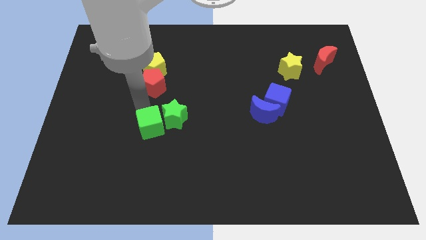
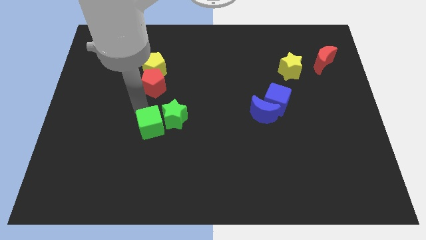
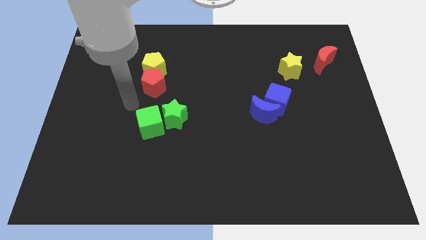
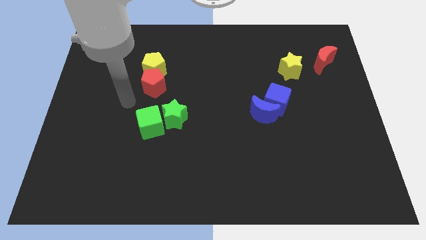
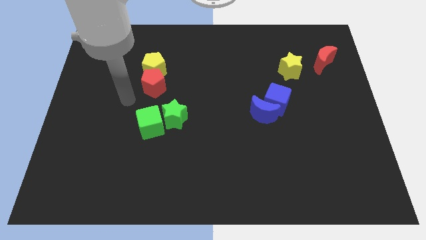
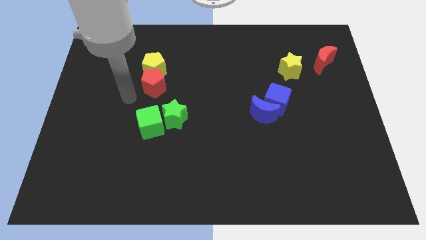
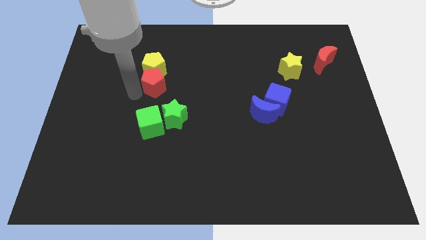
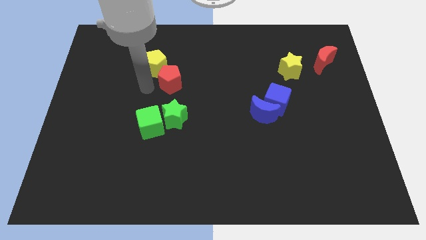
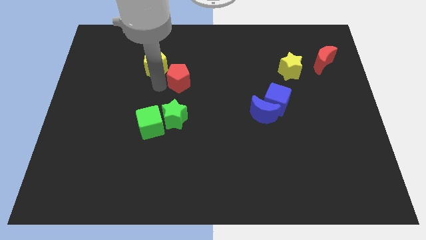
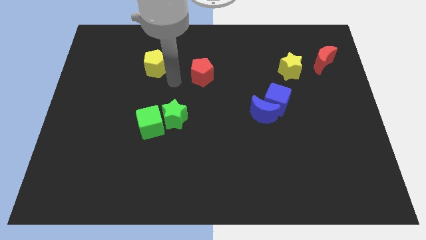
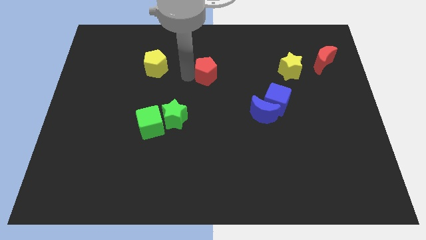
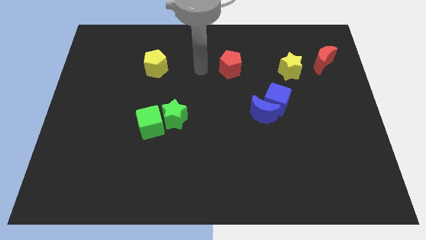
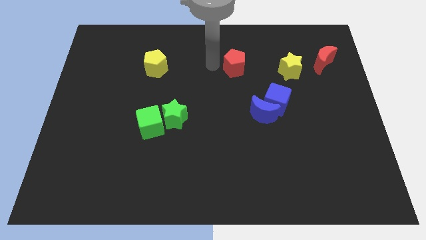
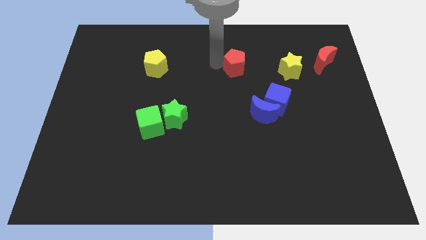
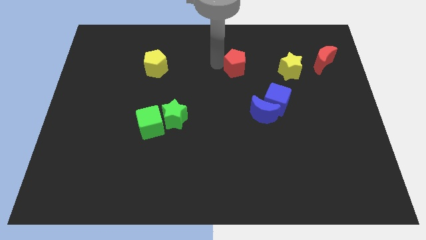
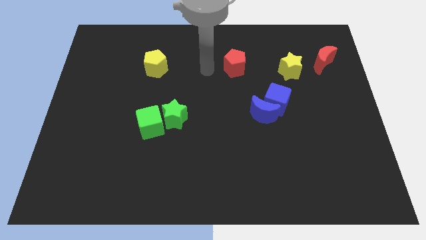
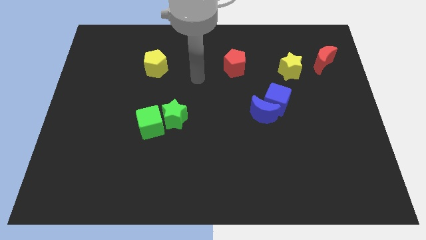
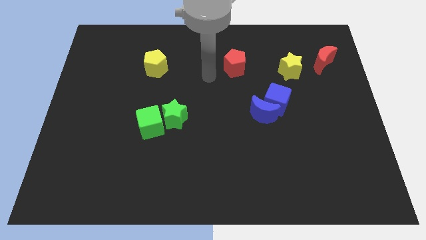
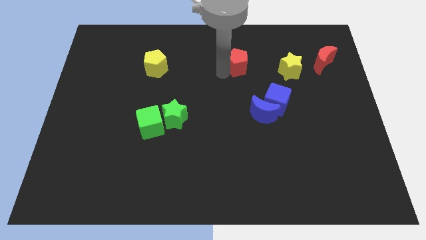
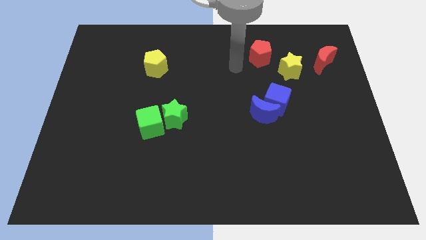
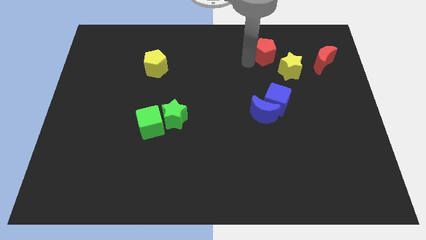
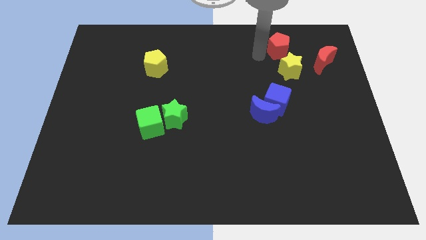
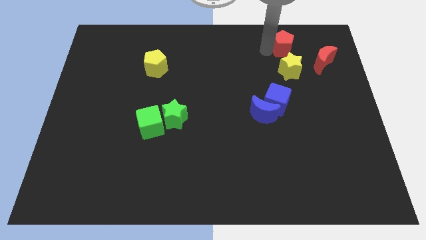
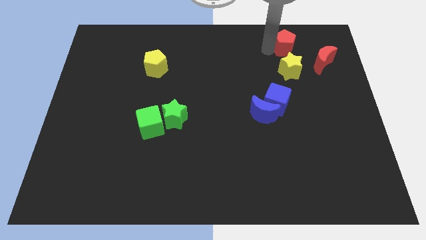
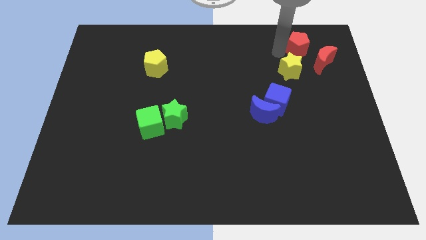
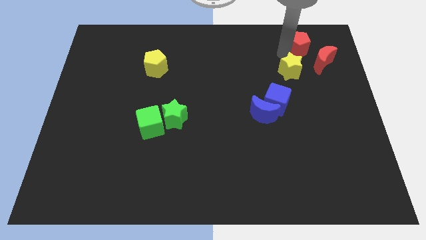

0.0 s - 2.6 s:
push the red pentagon towards the top right corner of the board

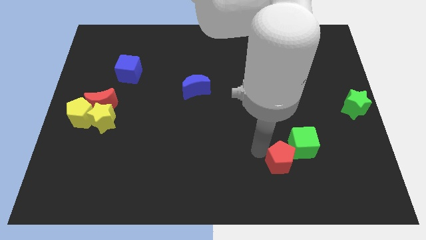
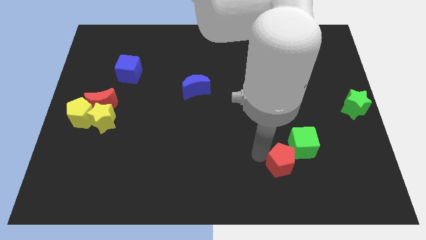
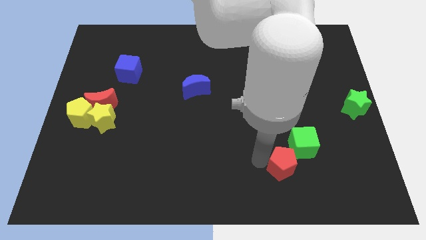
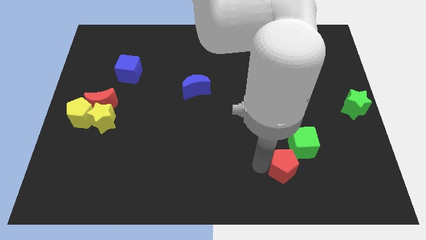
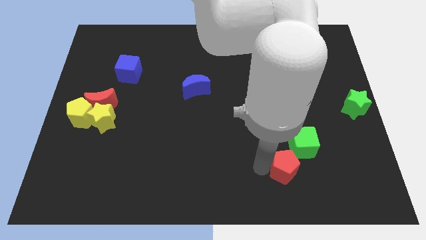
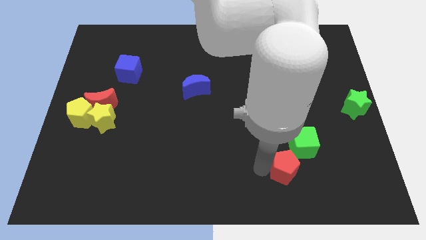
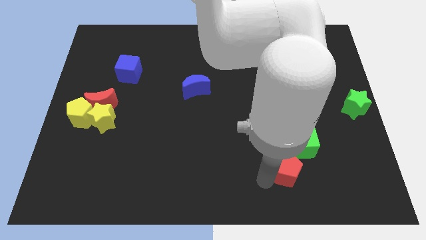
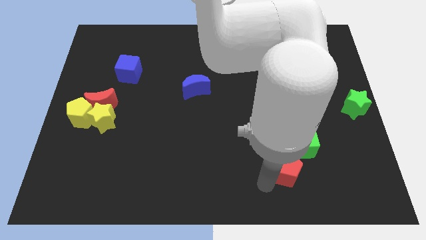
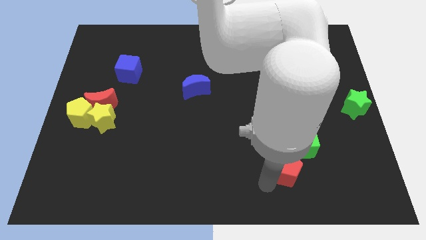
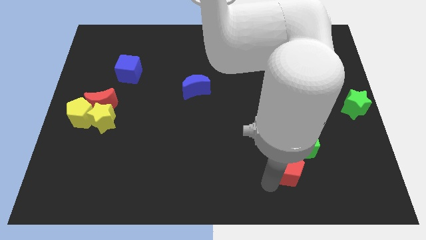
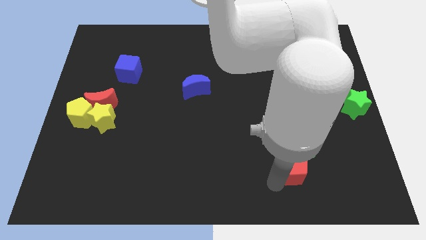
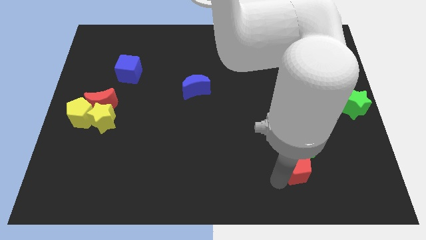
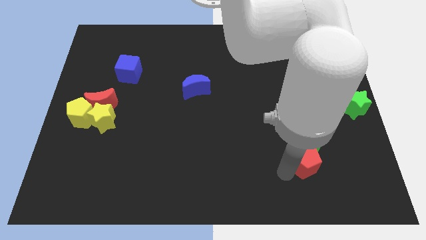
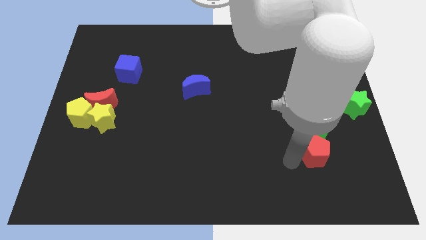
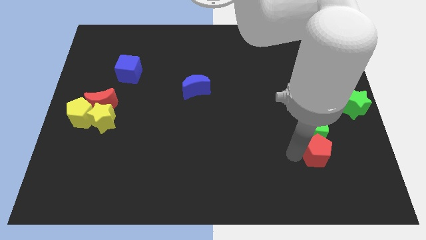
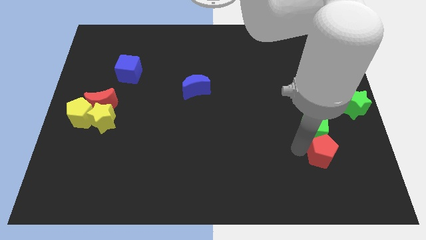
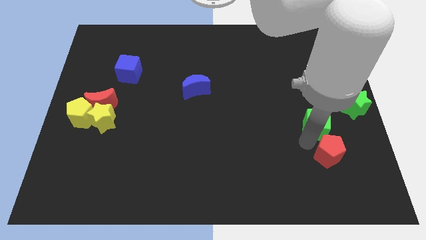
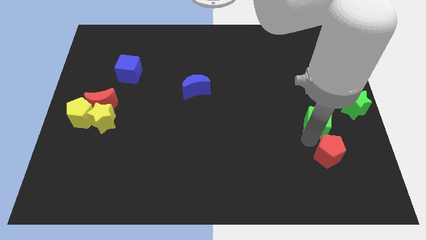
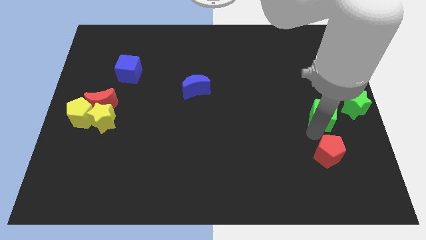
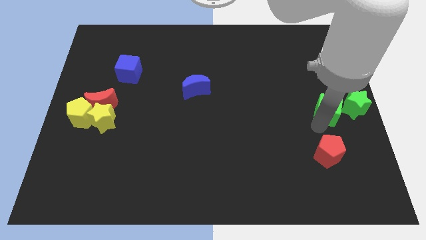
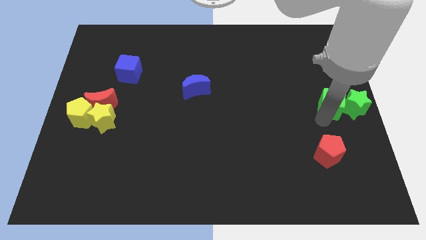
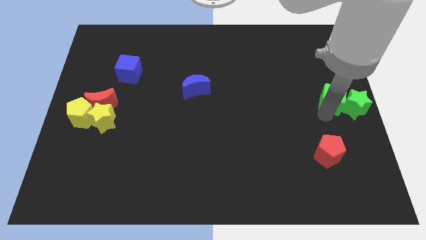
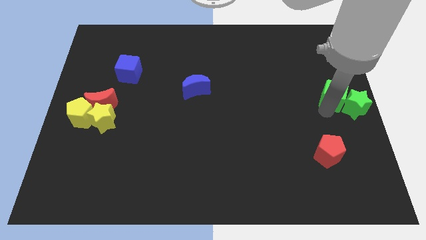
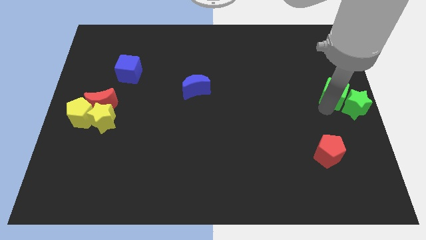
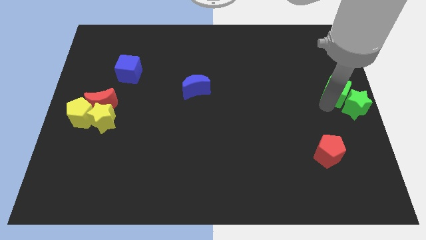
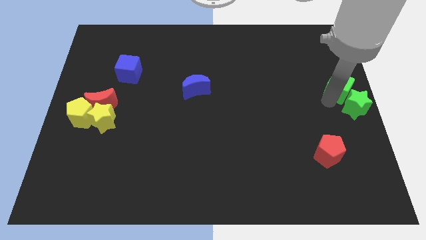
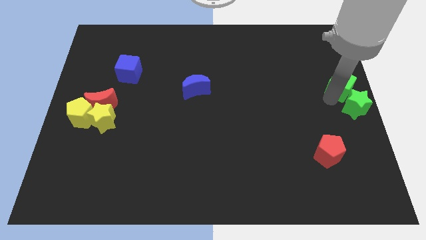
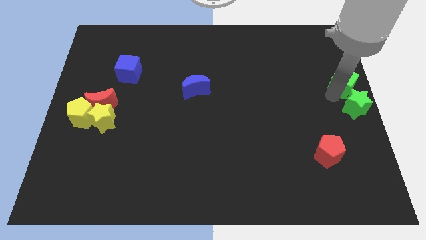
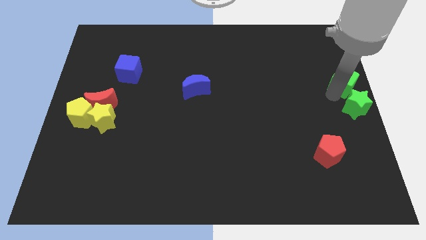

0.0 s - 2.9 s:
push green cube slightly above green star

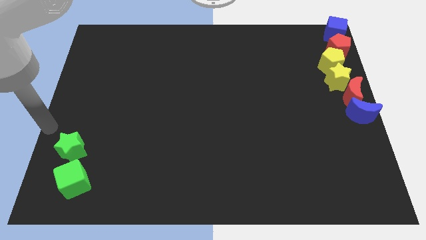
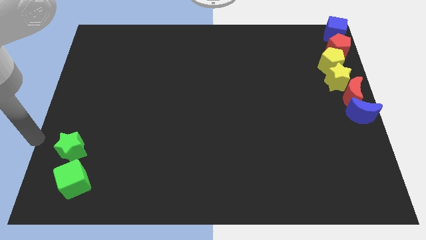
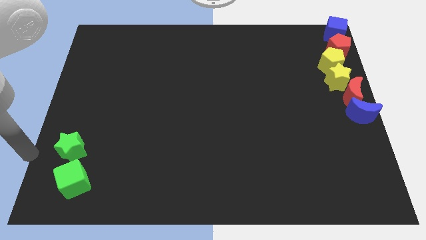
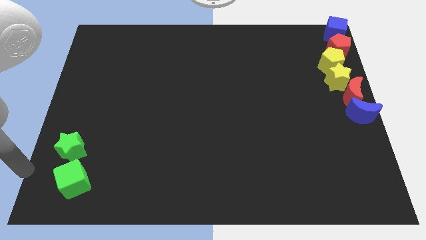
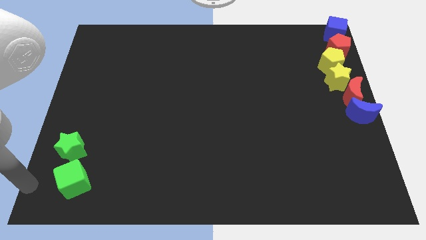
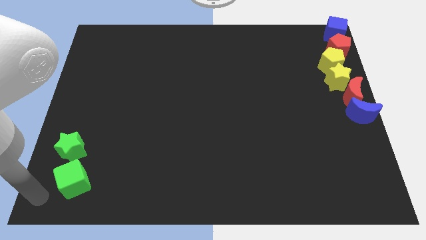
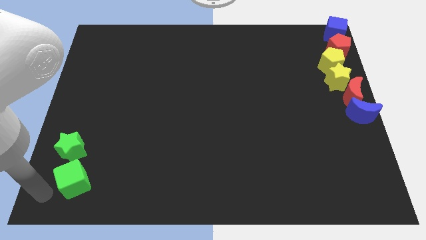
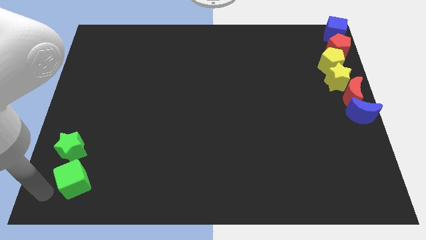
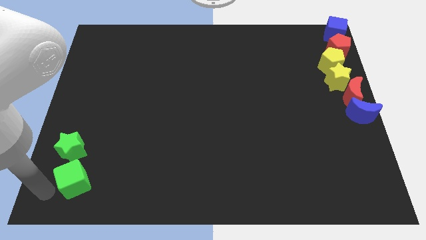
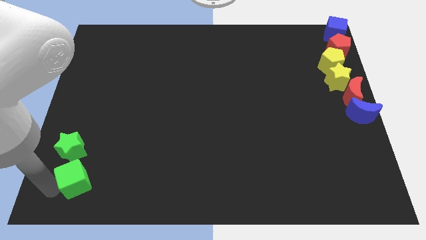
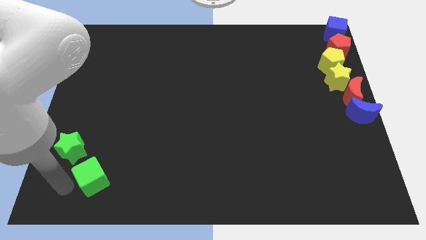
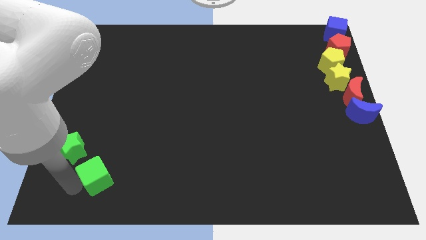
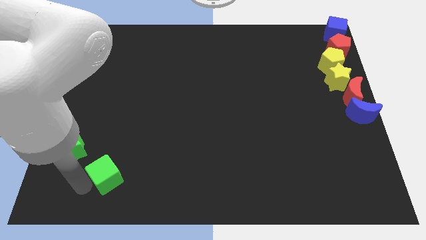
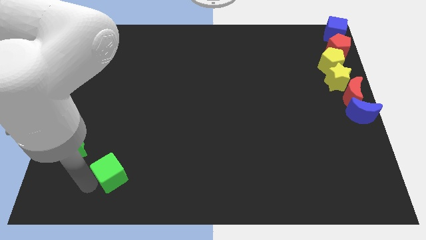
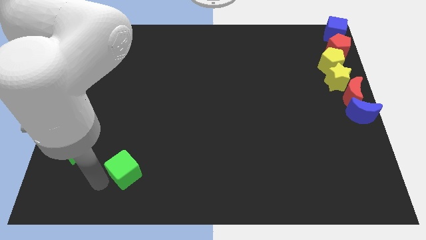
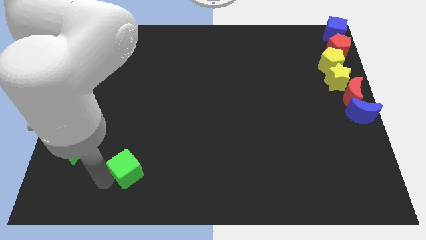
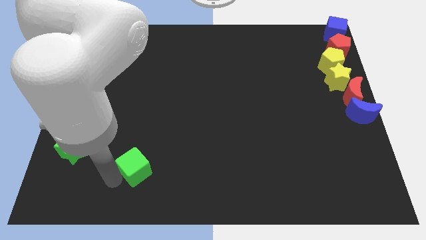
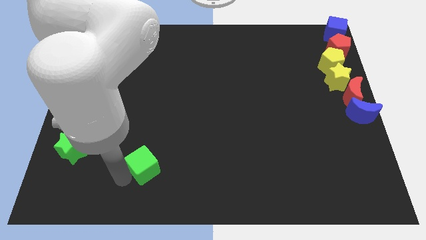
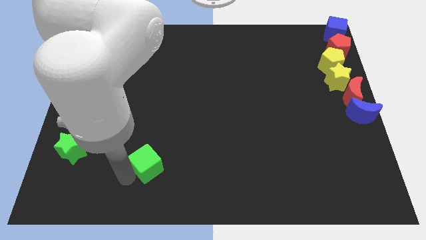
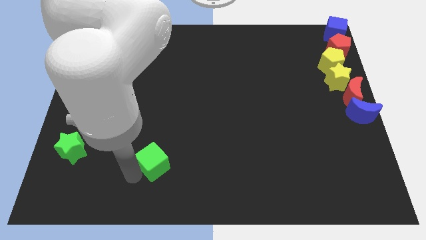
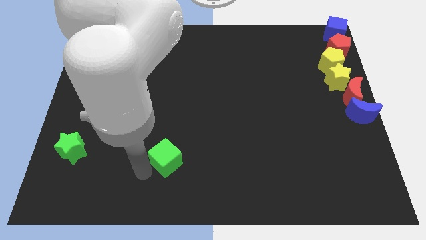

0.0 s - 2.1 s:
move green cube to the horizontal right of green star

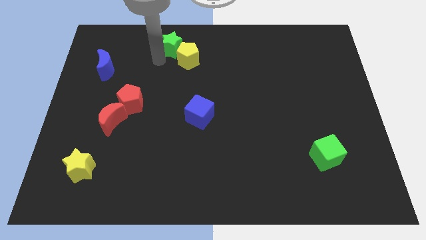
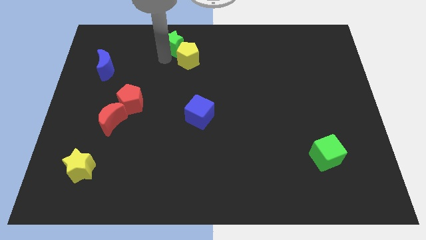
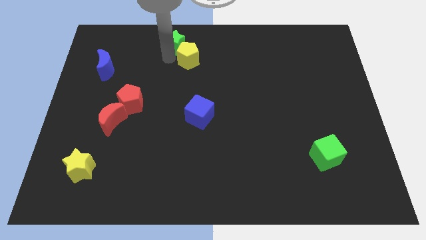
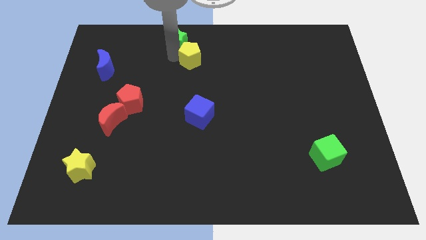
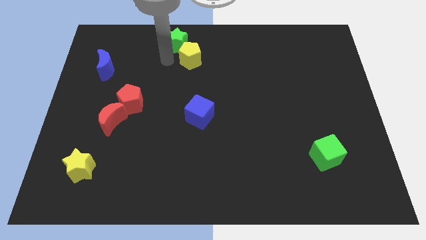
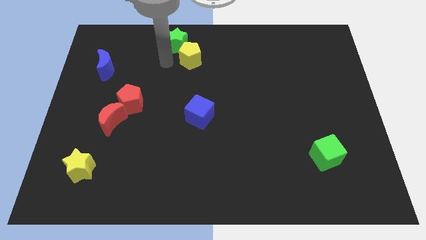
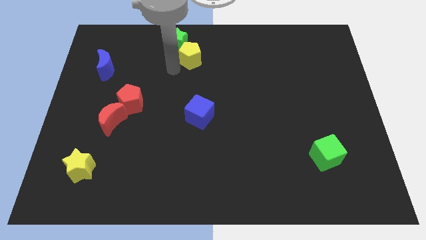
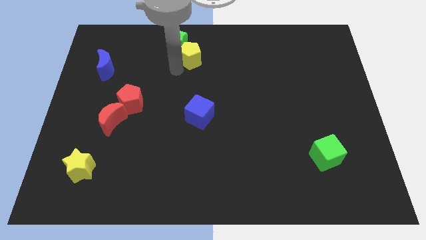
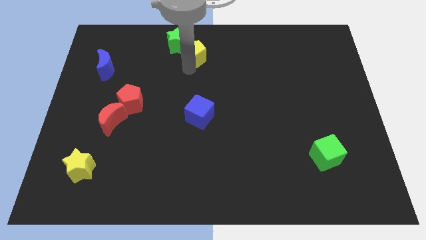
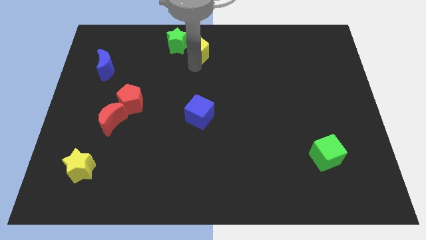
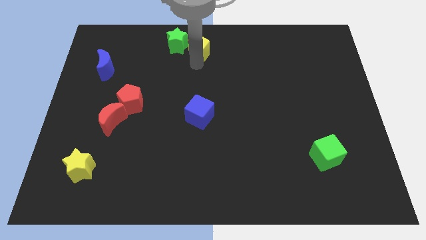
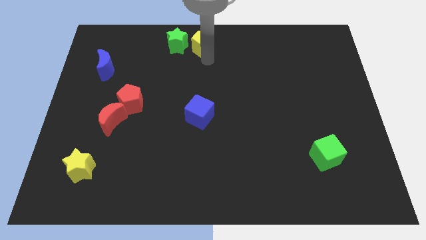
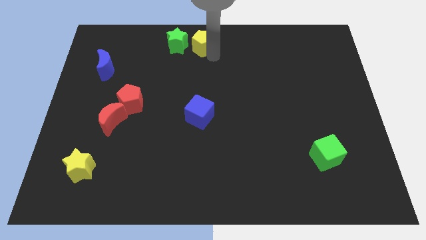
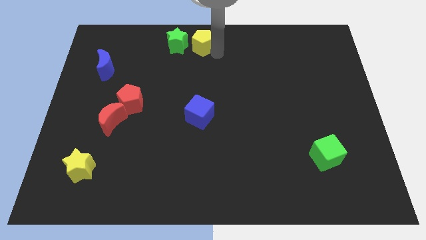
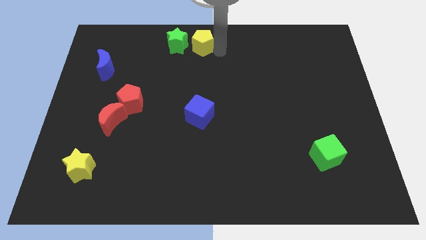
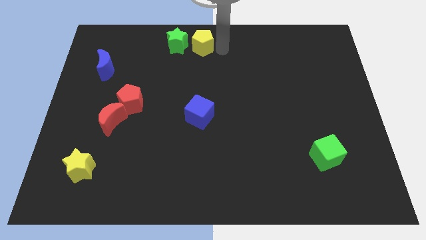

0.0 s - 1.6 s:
put the yellow pentagon right to the green star
